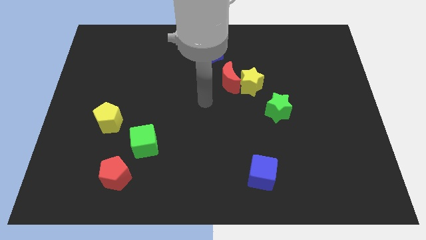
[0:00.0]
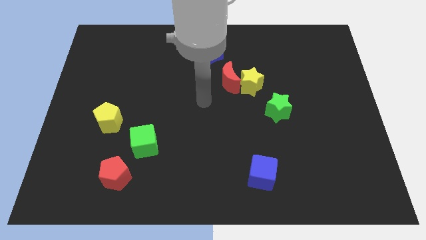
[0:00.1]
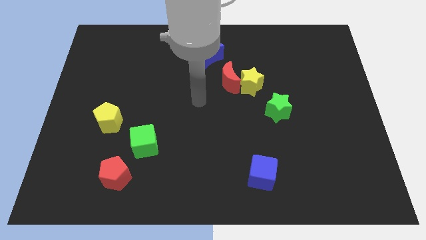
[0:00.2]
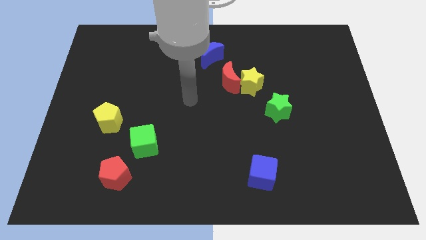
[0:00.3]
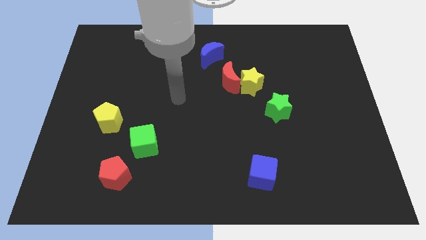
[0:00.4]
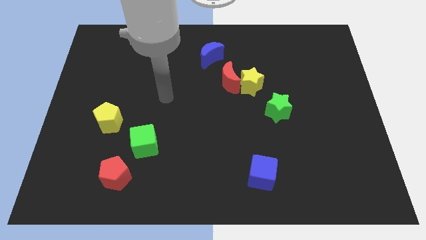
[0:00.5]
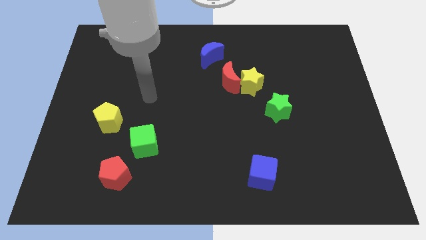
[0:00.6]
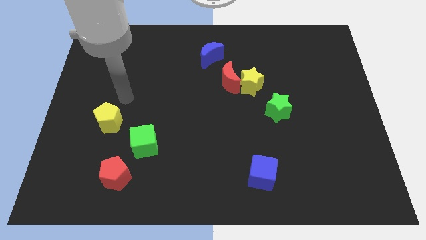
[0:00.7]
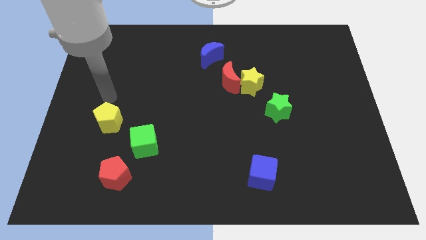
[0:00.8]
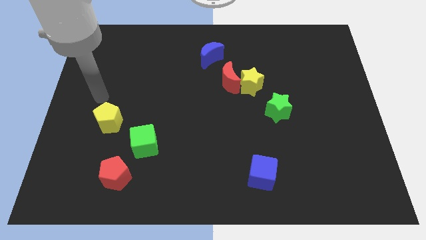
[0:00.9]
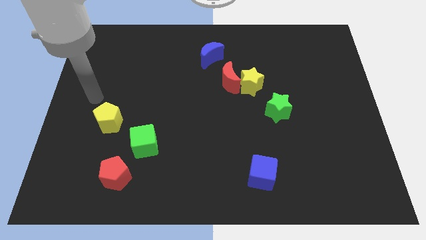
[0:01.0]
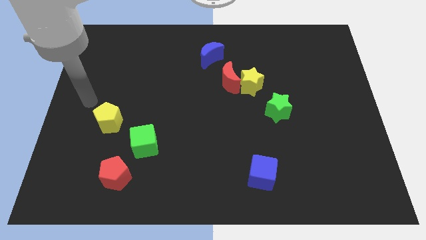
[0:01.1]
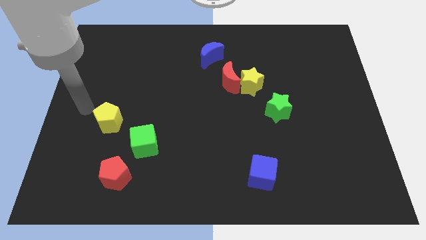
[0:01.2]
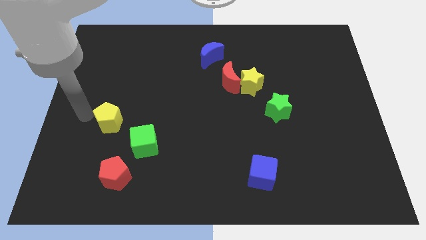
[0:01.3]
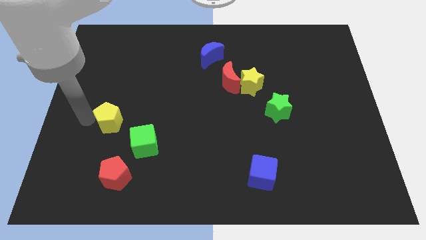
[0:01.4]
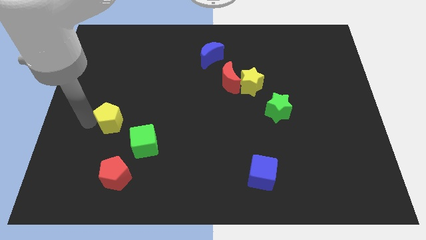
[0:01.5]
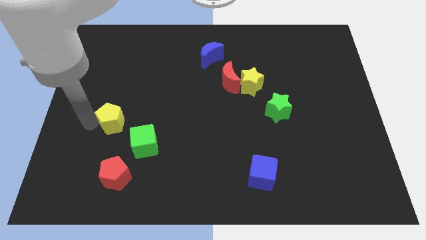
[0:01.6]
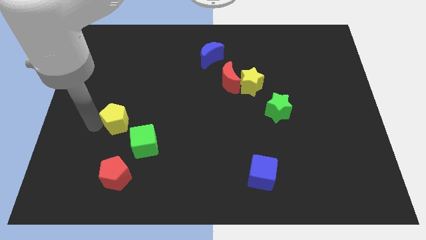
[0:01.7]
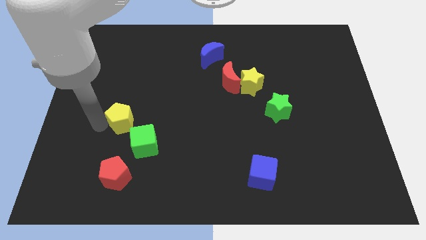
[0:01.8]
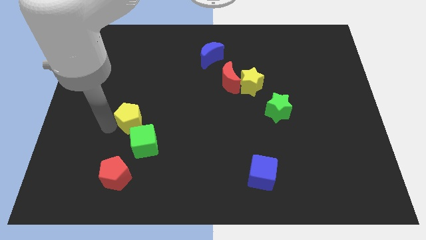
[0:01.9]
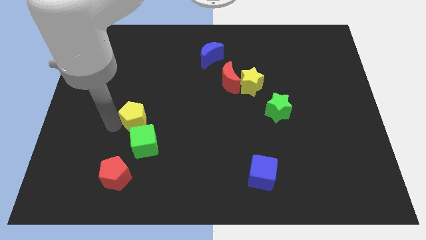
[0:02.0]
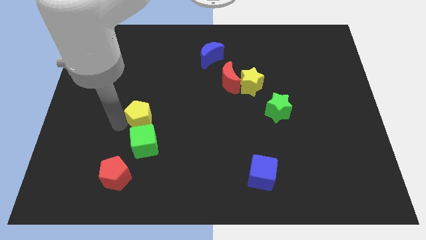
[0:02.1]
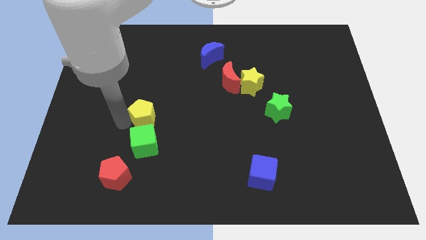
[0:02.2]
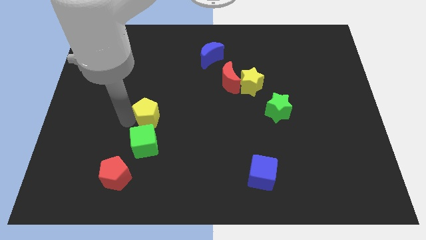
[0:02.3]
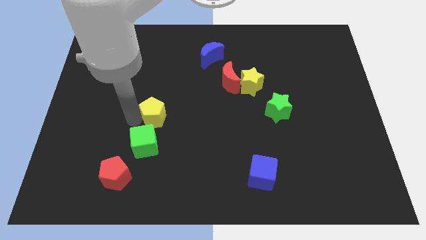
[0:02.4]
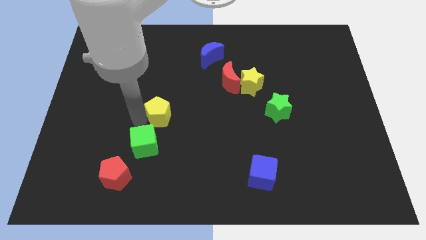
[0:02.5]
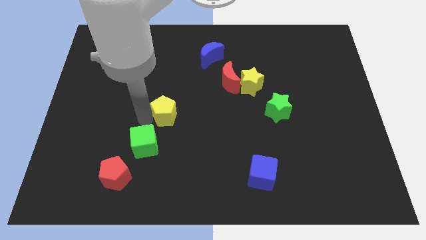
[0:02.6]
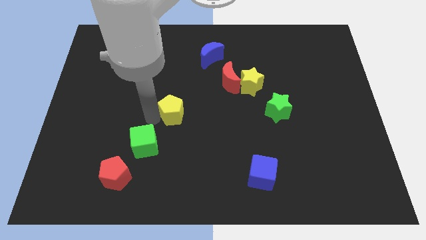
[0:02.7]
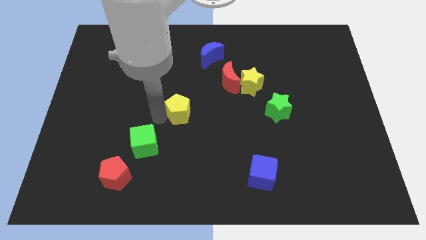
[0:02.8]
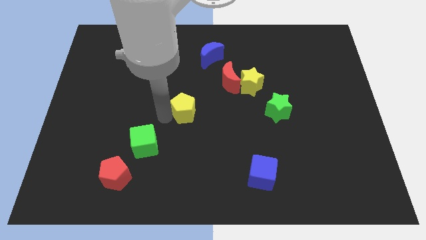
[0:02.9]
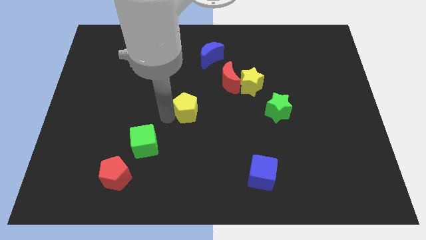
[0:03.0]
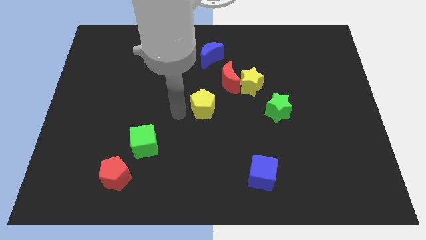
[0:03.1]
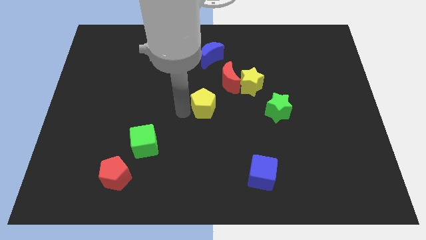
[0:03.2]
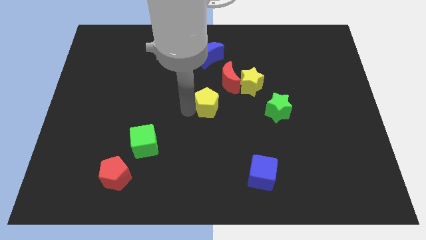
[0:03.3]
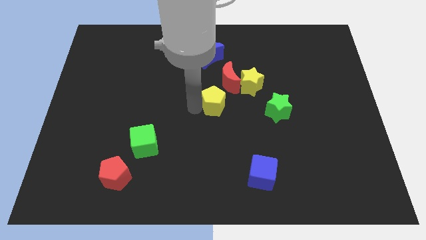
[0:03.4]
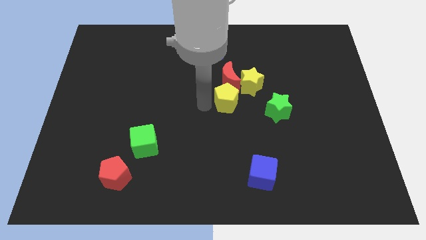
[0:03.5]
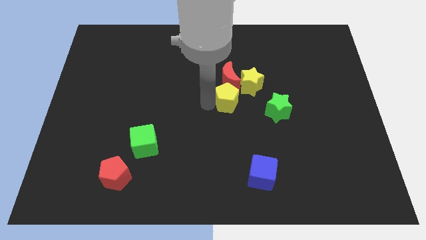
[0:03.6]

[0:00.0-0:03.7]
move the yellow pentagon towards the red moon

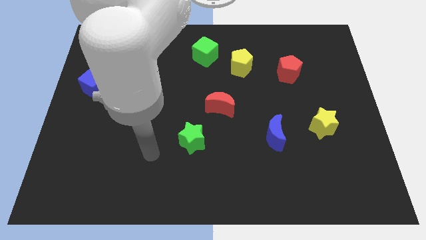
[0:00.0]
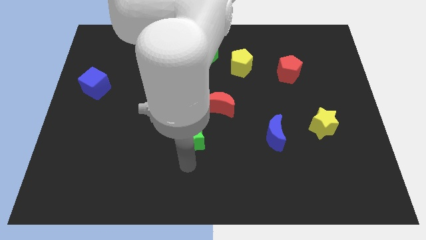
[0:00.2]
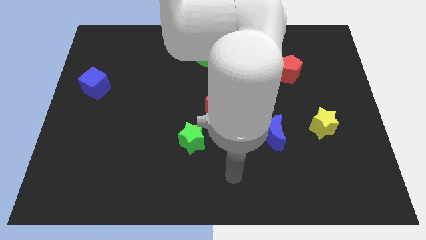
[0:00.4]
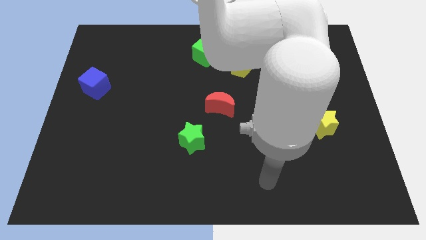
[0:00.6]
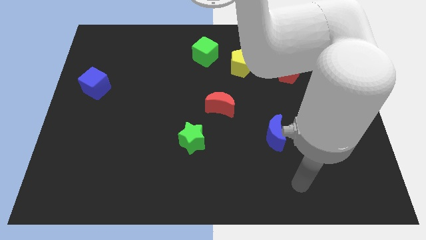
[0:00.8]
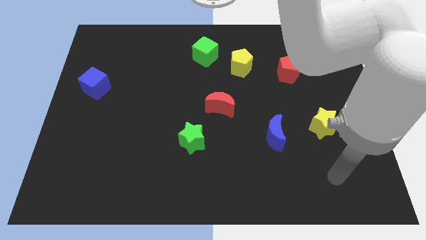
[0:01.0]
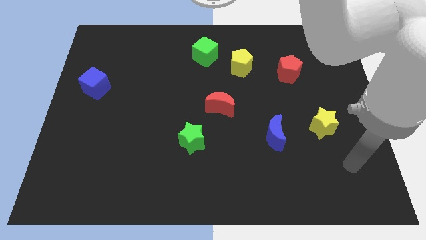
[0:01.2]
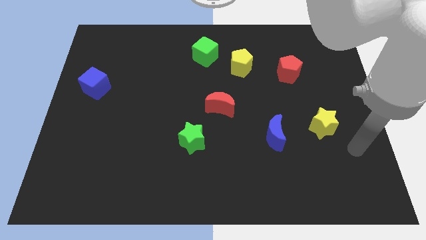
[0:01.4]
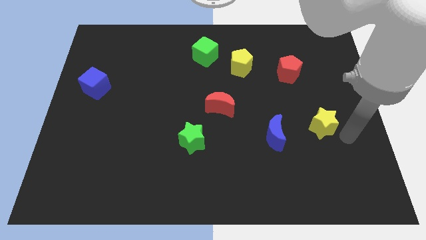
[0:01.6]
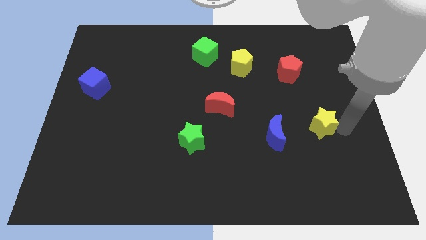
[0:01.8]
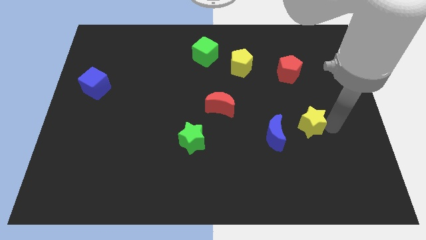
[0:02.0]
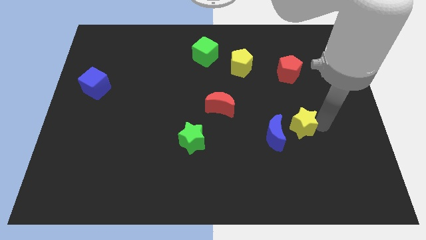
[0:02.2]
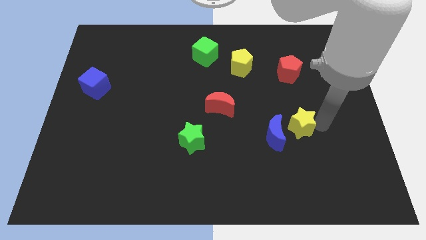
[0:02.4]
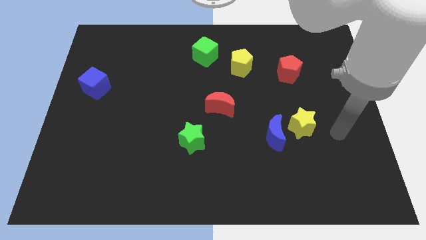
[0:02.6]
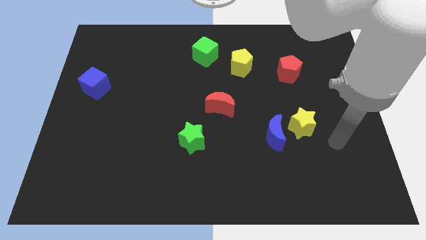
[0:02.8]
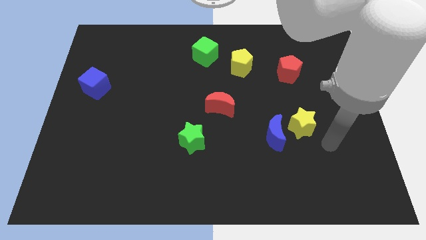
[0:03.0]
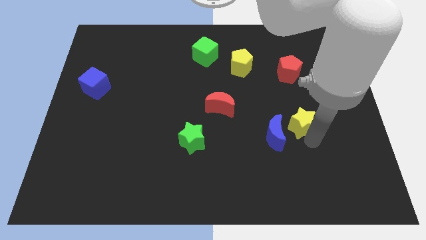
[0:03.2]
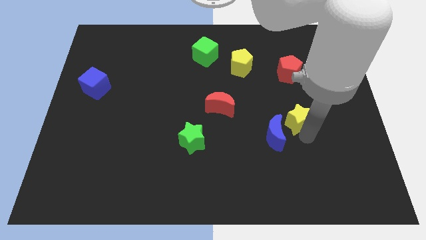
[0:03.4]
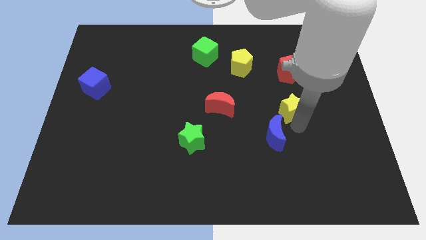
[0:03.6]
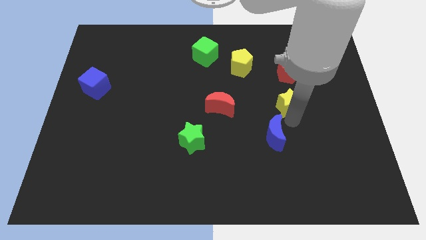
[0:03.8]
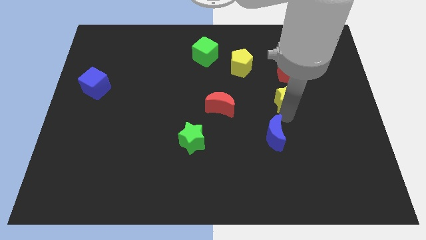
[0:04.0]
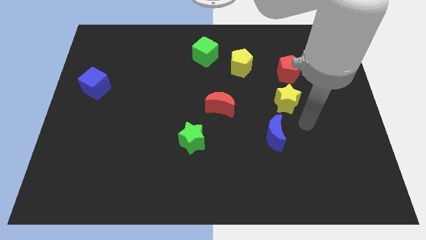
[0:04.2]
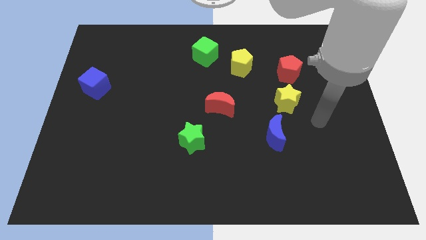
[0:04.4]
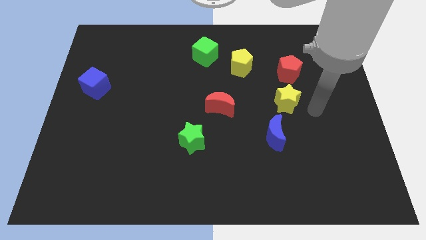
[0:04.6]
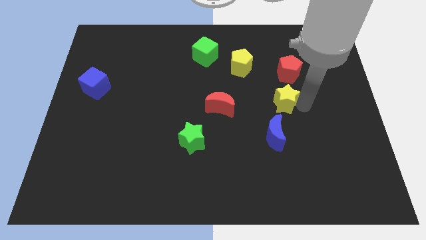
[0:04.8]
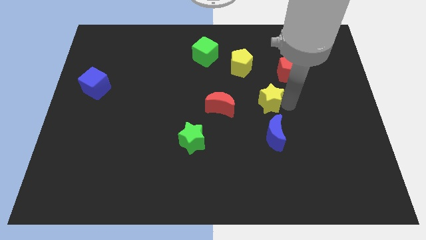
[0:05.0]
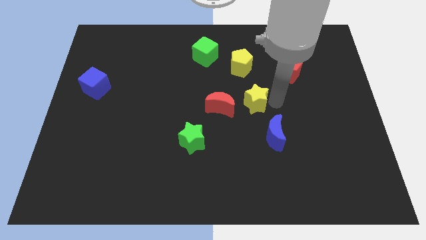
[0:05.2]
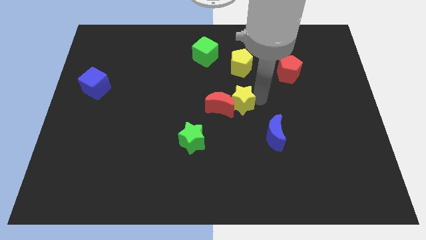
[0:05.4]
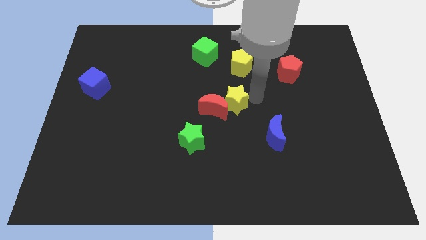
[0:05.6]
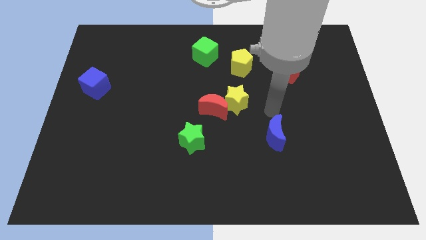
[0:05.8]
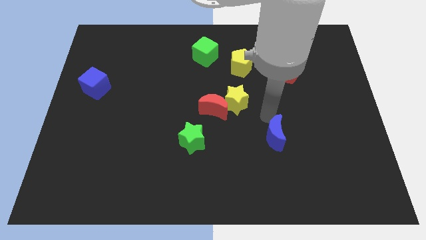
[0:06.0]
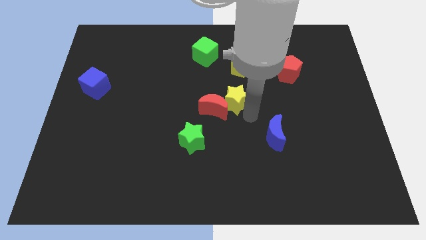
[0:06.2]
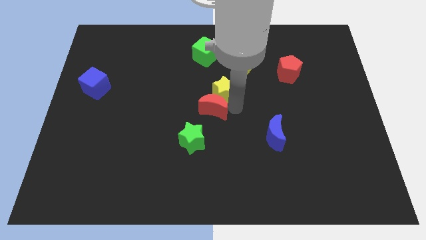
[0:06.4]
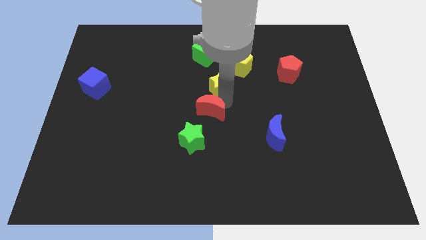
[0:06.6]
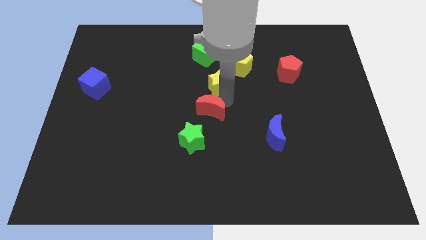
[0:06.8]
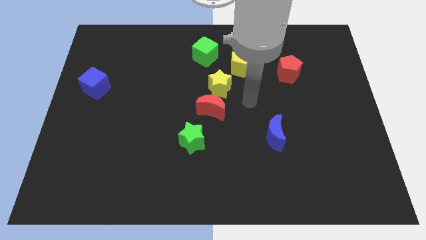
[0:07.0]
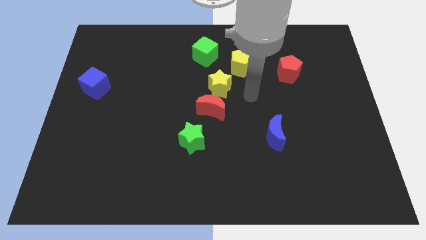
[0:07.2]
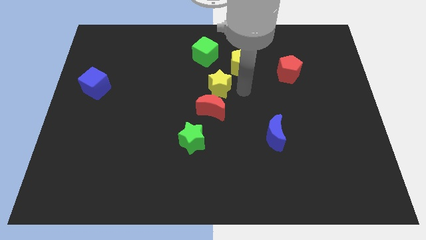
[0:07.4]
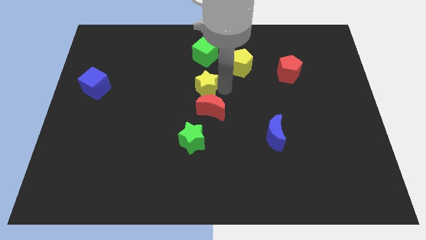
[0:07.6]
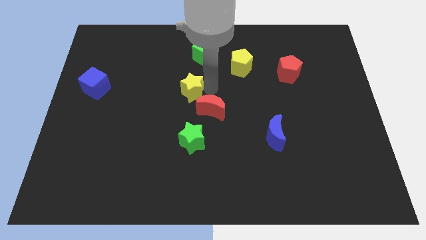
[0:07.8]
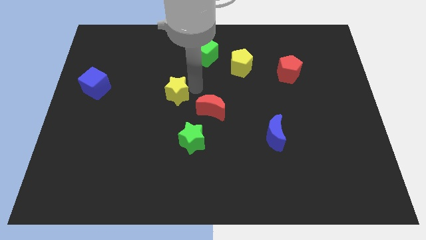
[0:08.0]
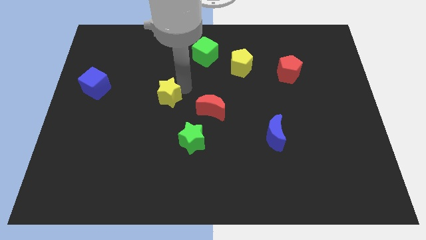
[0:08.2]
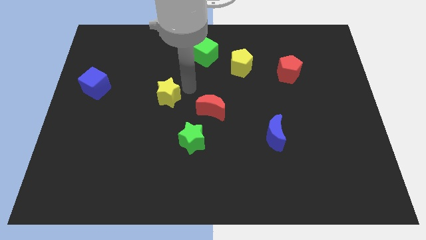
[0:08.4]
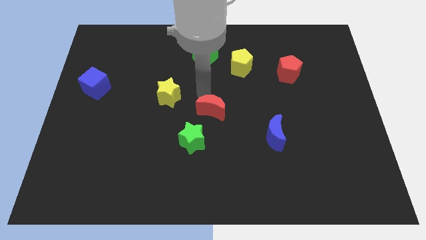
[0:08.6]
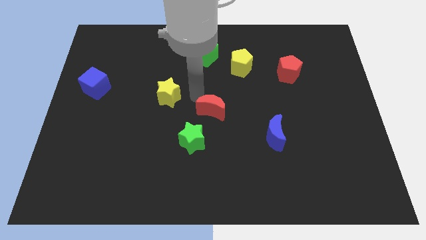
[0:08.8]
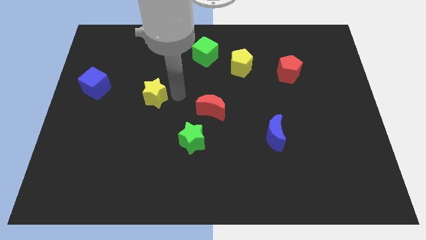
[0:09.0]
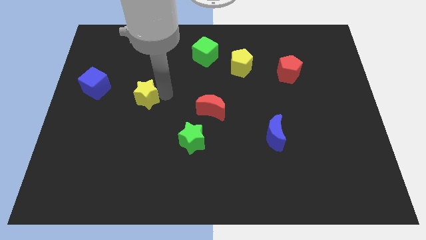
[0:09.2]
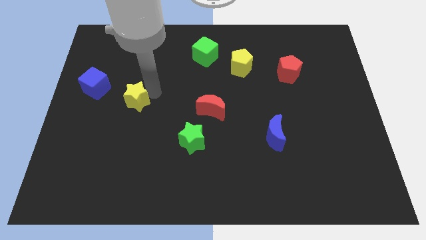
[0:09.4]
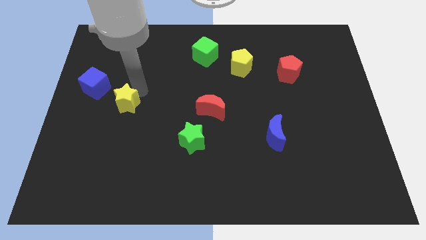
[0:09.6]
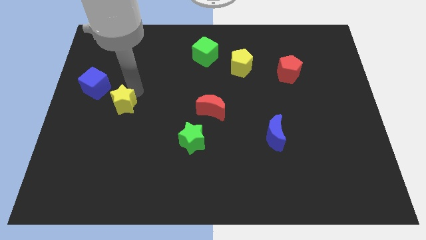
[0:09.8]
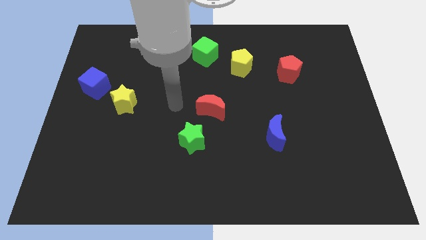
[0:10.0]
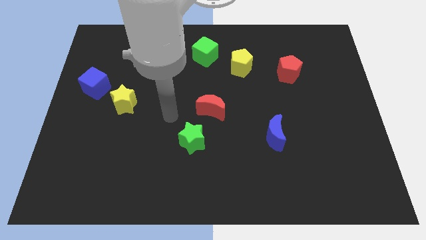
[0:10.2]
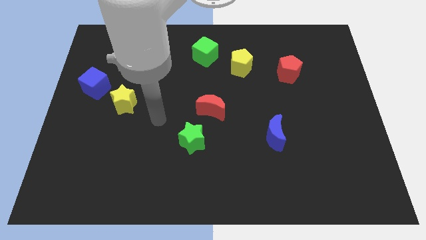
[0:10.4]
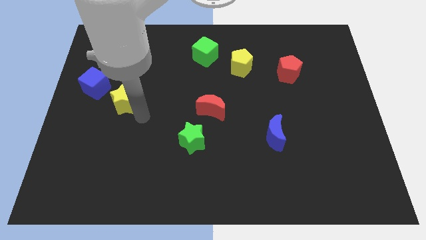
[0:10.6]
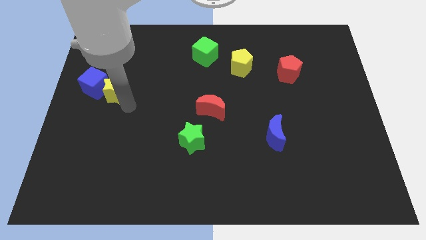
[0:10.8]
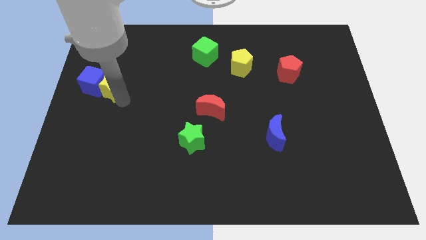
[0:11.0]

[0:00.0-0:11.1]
move the yellow star close to the blue cube
